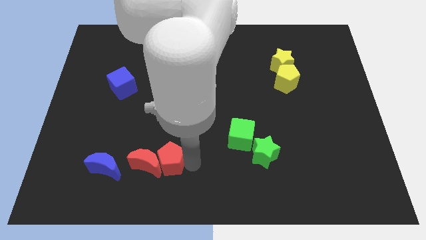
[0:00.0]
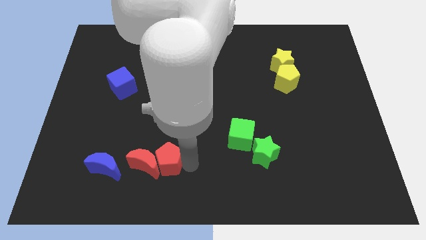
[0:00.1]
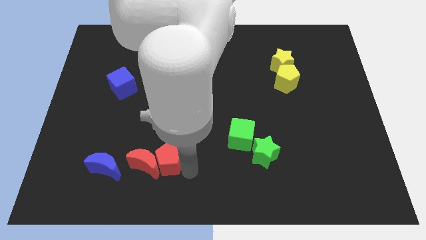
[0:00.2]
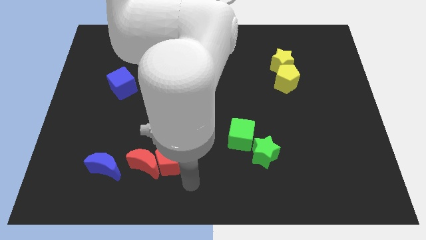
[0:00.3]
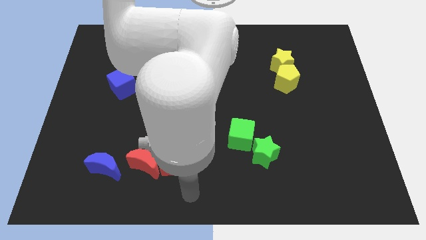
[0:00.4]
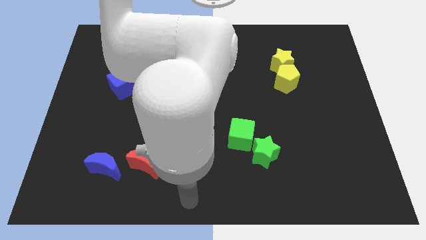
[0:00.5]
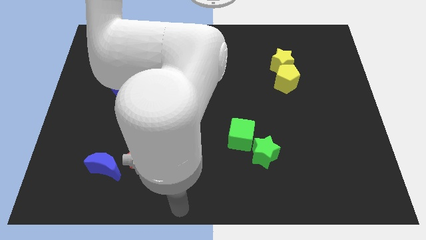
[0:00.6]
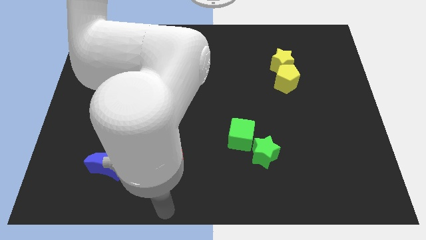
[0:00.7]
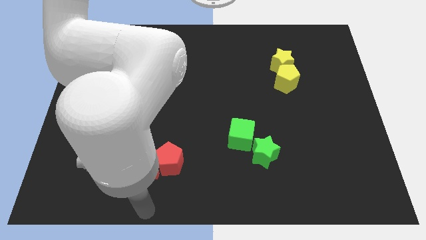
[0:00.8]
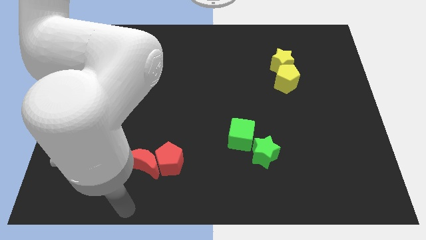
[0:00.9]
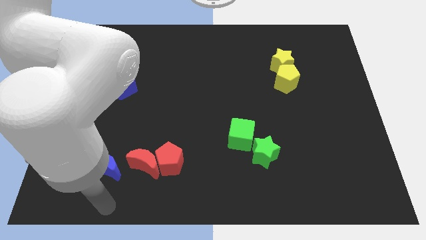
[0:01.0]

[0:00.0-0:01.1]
move your hand below the blue moon

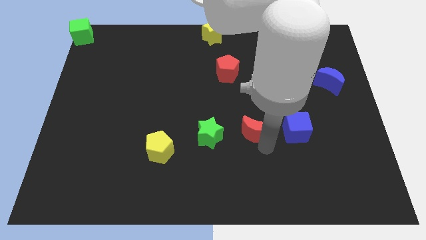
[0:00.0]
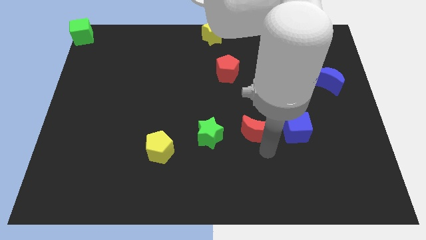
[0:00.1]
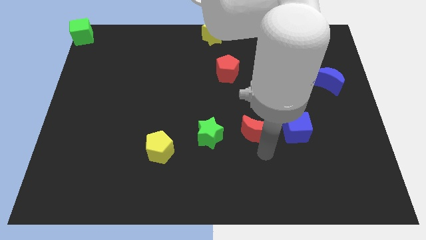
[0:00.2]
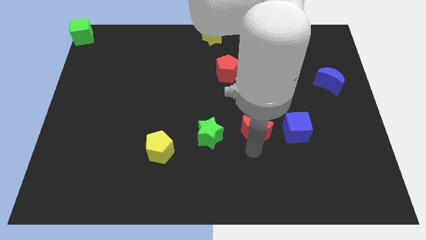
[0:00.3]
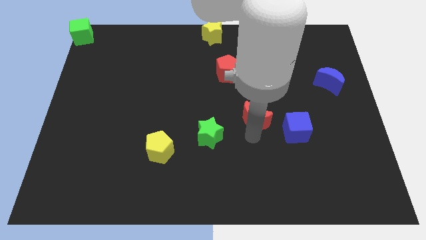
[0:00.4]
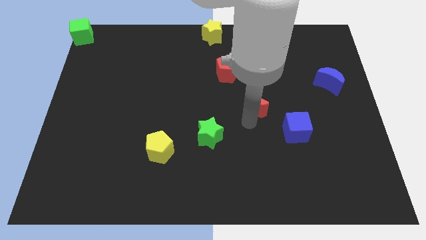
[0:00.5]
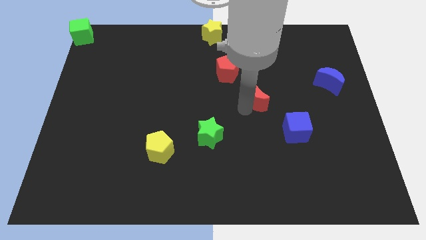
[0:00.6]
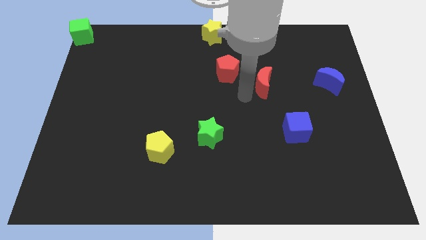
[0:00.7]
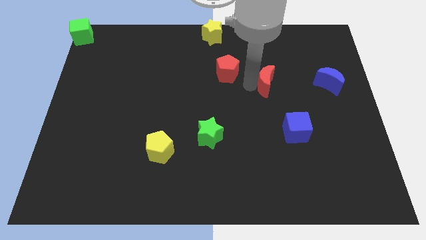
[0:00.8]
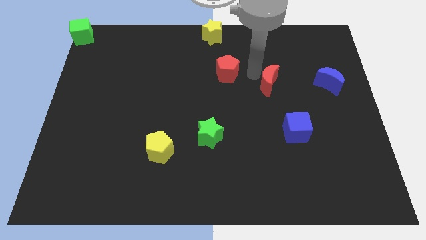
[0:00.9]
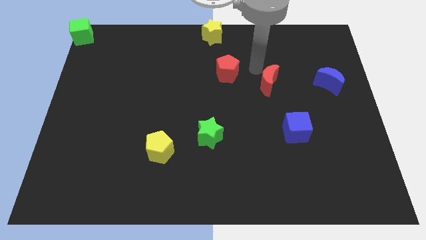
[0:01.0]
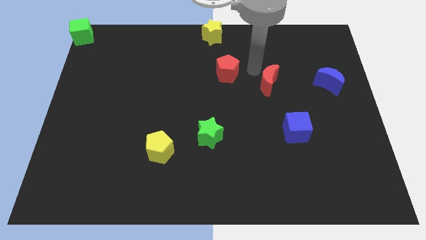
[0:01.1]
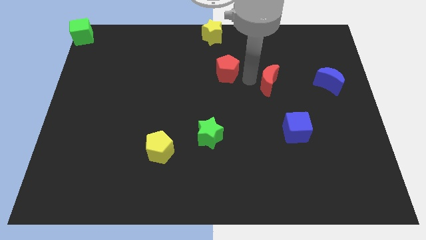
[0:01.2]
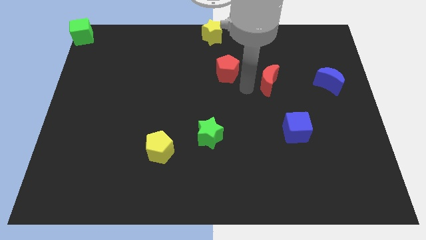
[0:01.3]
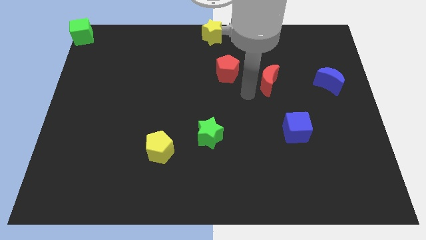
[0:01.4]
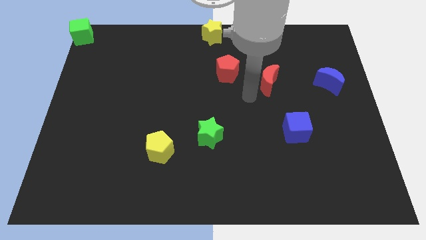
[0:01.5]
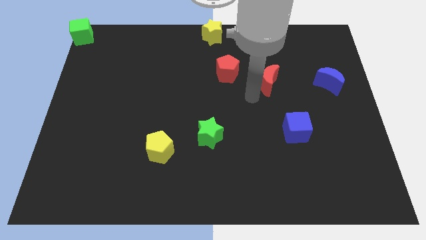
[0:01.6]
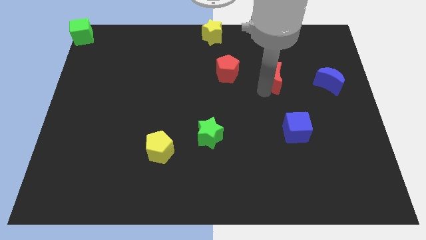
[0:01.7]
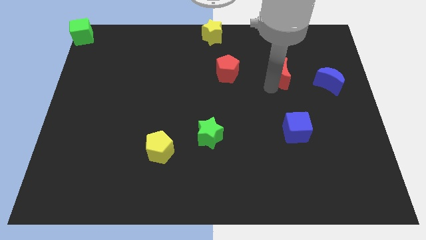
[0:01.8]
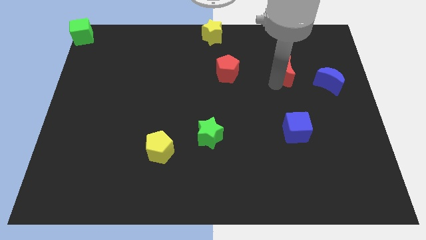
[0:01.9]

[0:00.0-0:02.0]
move red crescent to the right of red pentagon

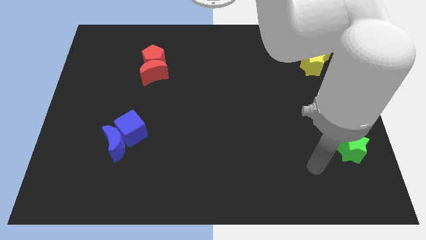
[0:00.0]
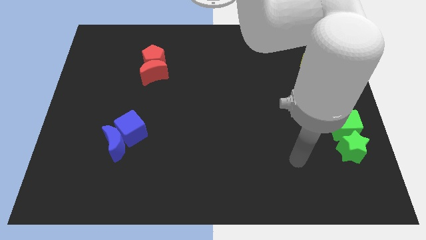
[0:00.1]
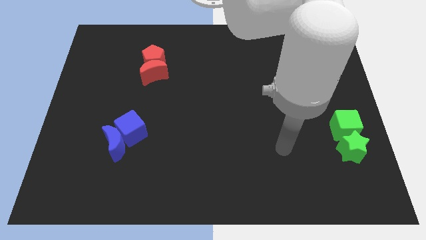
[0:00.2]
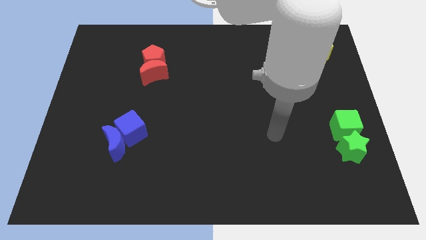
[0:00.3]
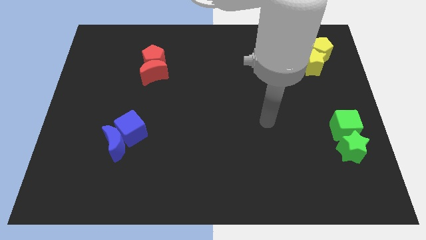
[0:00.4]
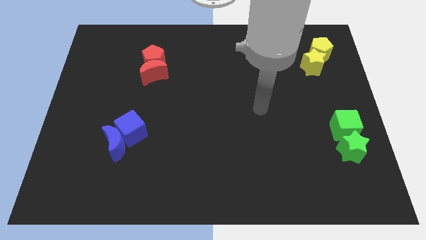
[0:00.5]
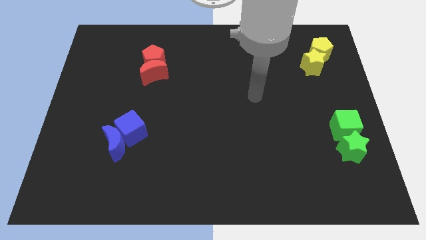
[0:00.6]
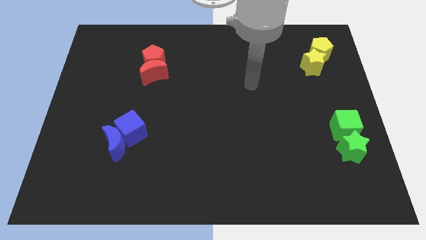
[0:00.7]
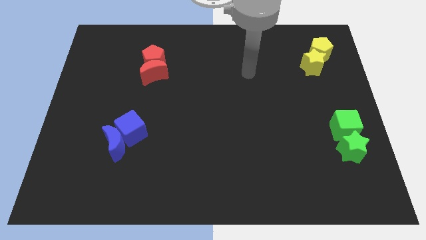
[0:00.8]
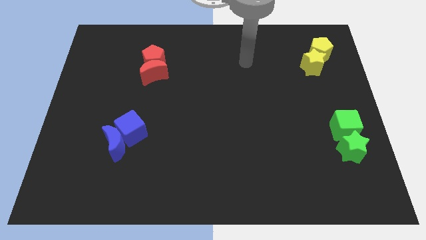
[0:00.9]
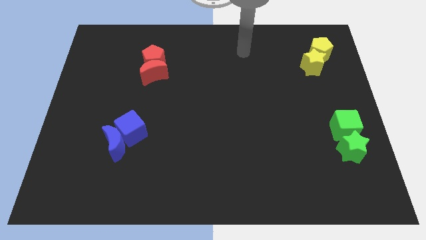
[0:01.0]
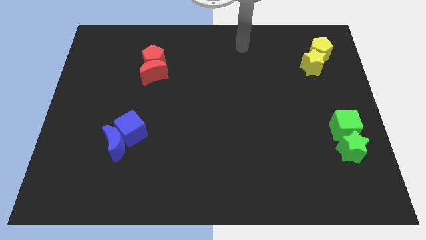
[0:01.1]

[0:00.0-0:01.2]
move your arm to the top middle of the board

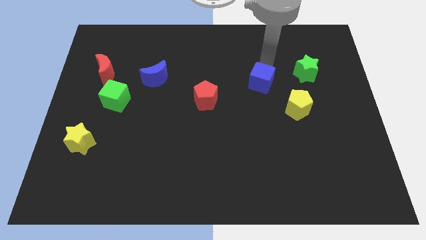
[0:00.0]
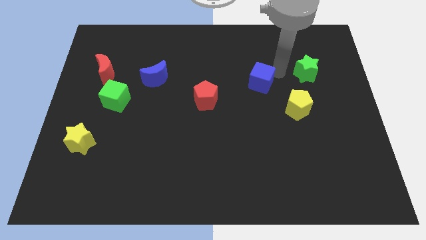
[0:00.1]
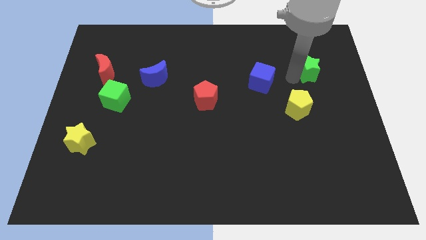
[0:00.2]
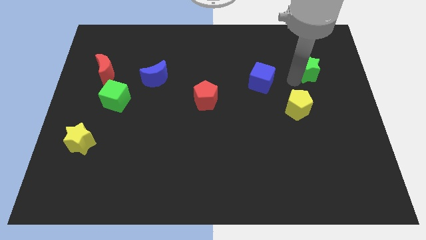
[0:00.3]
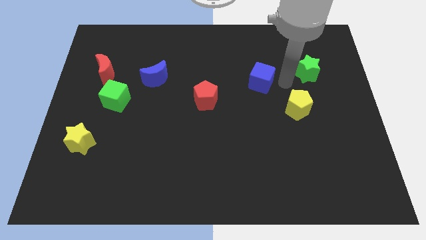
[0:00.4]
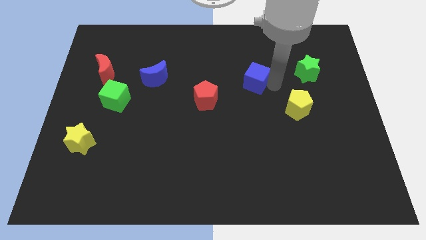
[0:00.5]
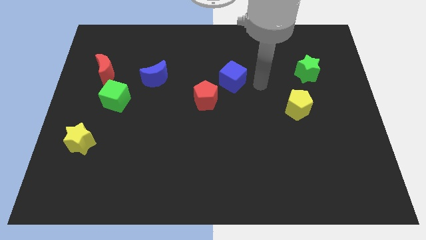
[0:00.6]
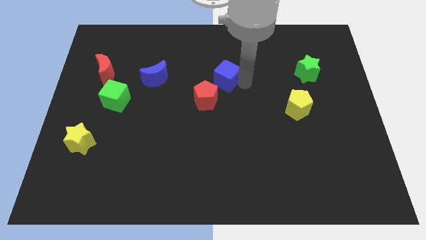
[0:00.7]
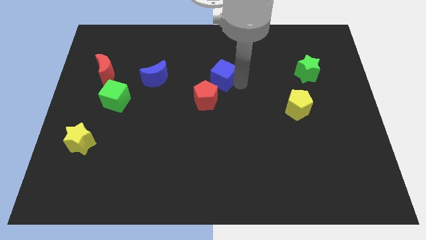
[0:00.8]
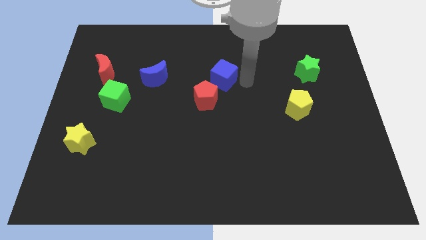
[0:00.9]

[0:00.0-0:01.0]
push the blue cube near to the red pentagon

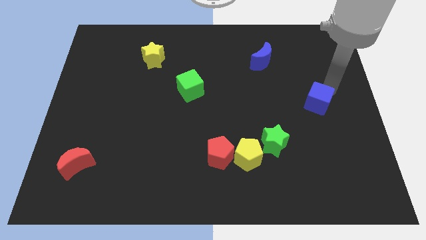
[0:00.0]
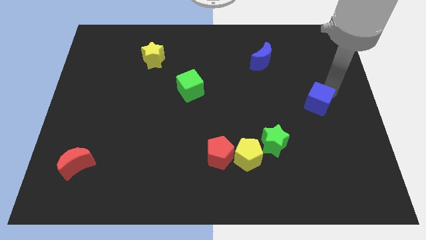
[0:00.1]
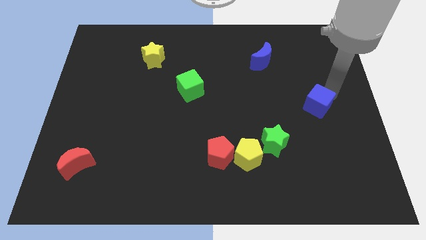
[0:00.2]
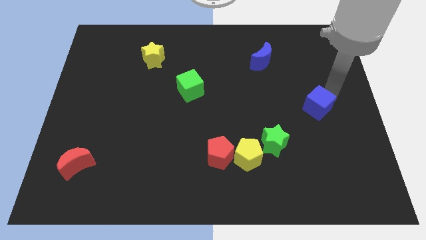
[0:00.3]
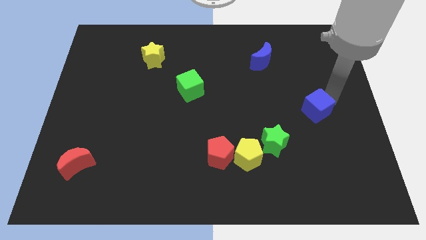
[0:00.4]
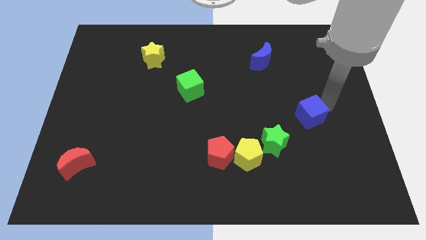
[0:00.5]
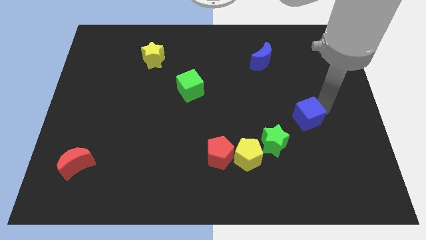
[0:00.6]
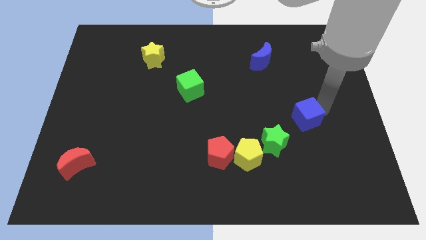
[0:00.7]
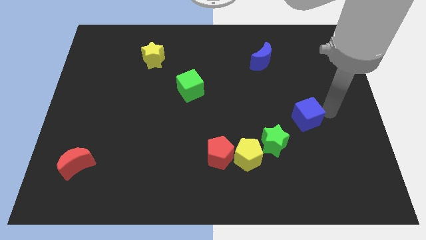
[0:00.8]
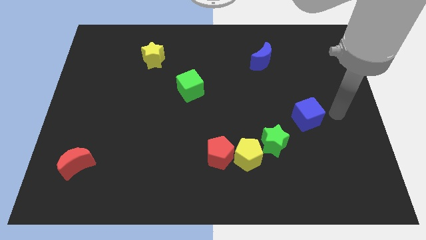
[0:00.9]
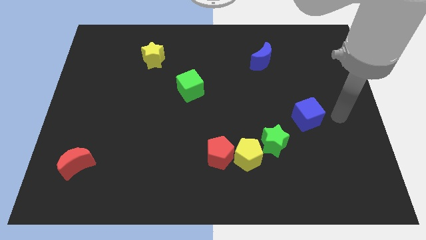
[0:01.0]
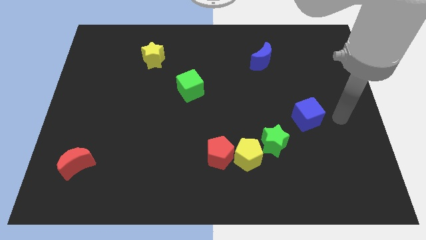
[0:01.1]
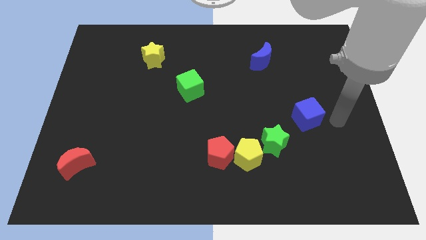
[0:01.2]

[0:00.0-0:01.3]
push the blue cube towards the green star

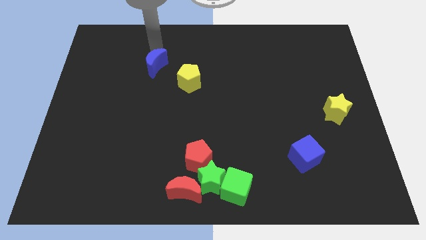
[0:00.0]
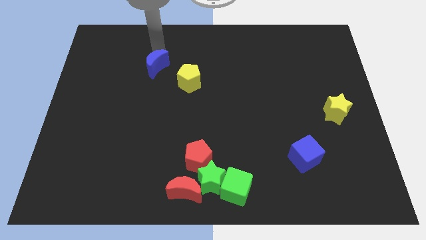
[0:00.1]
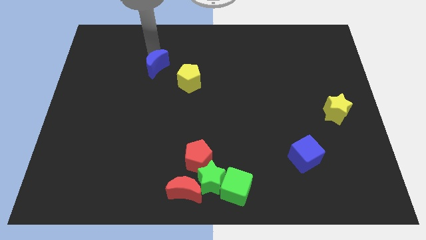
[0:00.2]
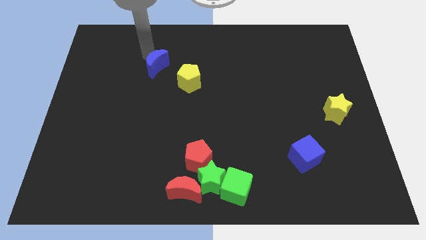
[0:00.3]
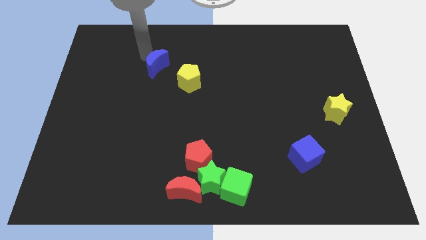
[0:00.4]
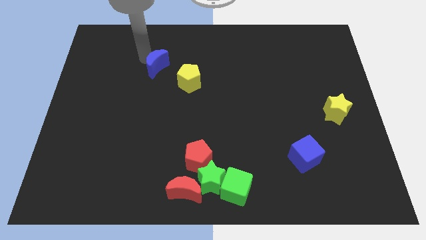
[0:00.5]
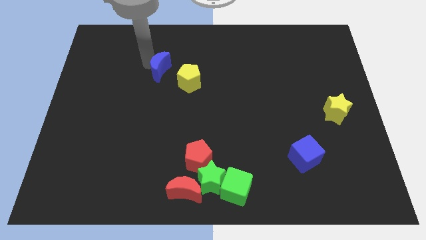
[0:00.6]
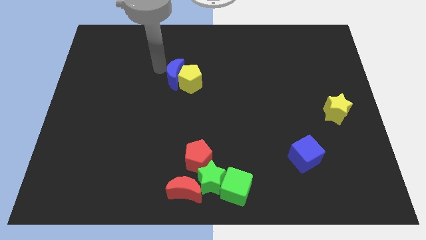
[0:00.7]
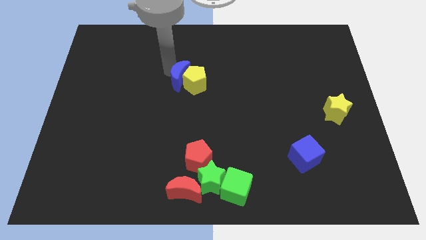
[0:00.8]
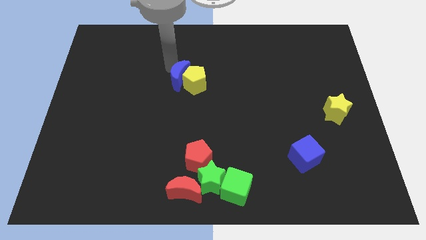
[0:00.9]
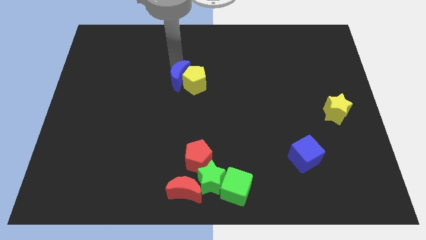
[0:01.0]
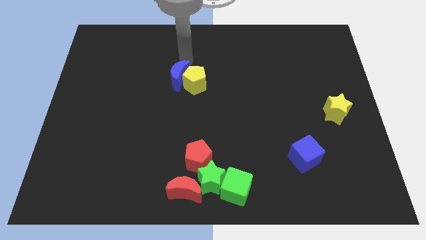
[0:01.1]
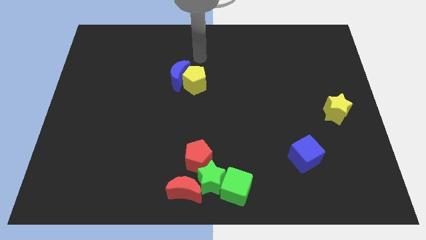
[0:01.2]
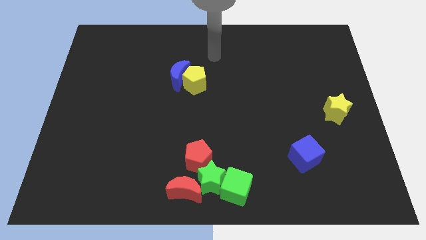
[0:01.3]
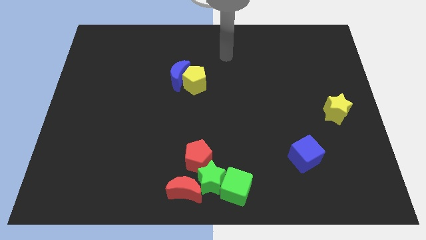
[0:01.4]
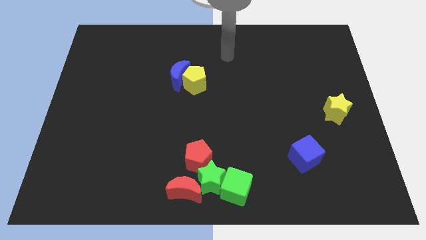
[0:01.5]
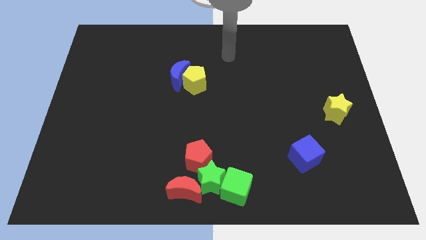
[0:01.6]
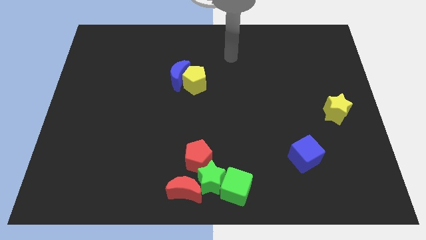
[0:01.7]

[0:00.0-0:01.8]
move the blue moon into the yellow pentagon

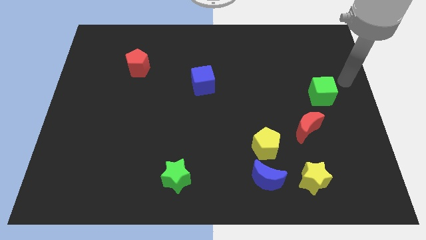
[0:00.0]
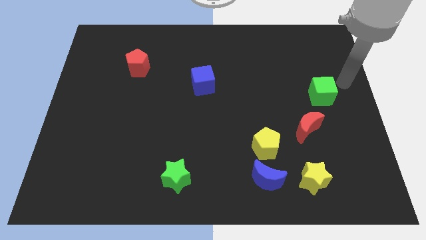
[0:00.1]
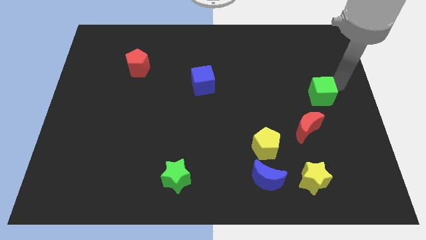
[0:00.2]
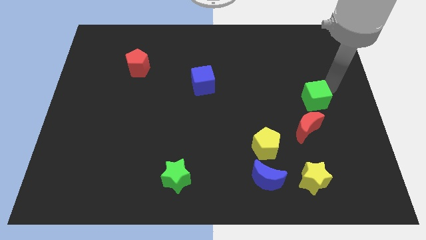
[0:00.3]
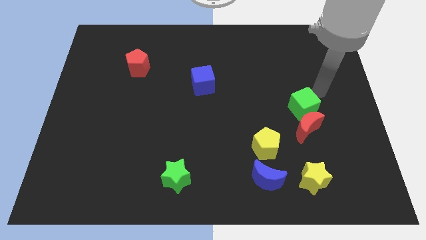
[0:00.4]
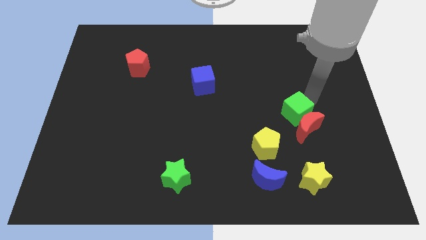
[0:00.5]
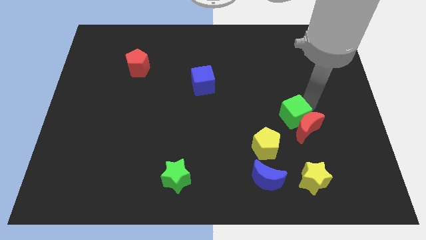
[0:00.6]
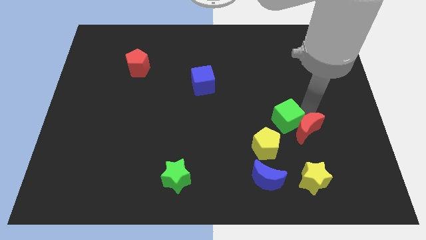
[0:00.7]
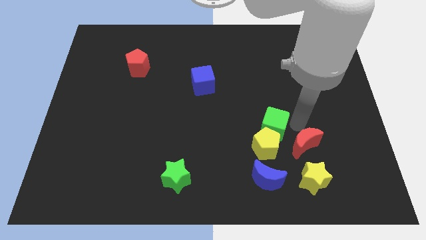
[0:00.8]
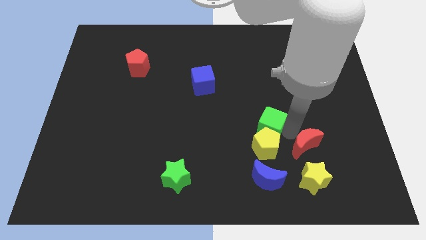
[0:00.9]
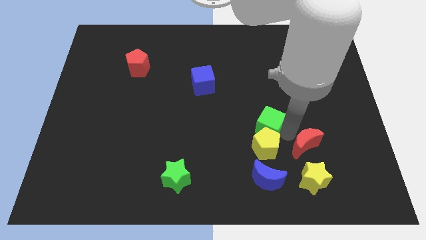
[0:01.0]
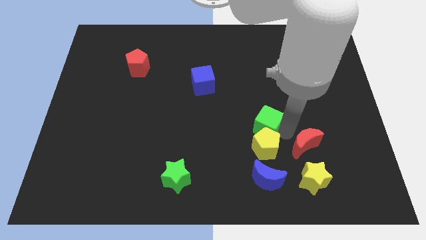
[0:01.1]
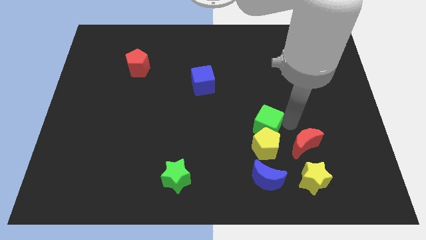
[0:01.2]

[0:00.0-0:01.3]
push the green cube at the top of the yellow pentagon
